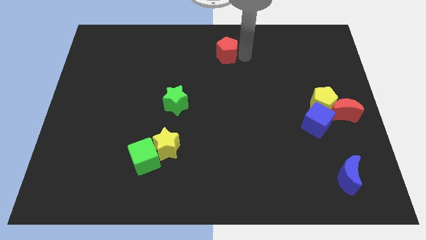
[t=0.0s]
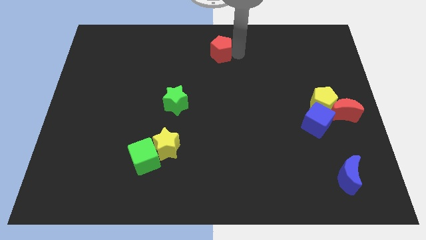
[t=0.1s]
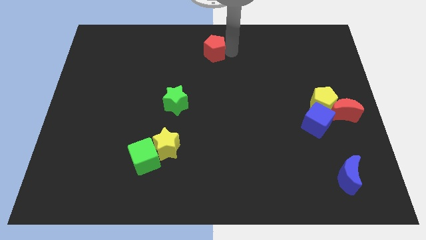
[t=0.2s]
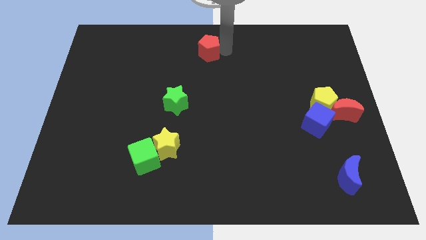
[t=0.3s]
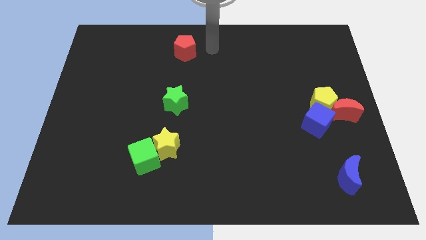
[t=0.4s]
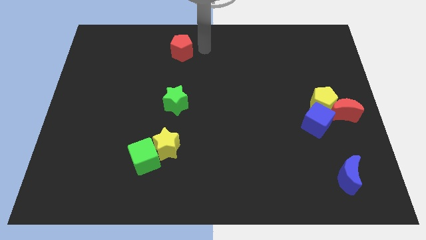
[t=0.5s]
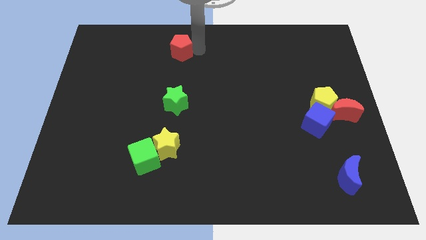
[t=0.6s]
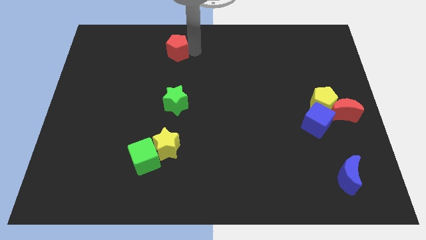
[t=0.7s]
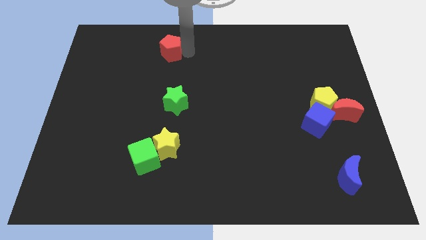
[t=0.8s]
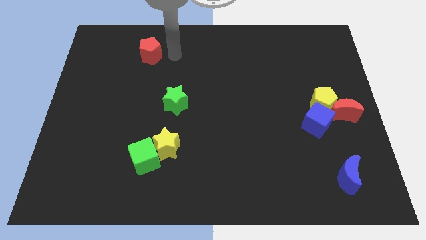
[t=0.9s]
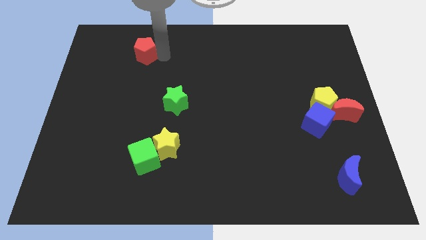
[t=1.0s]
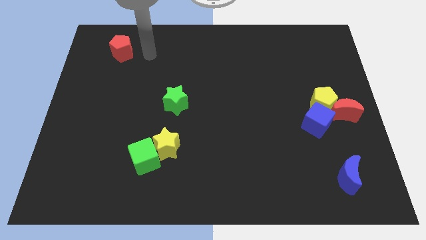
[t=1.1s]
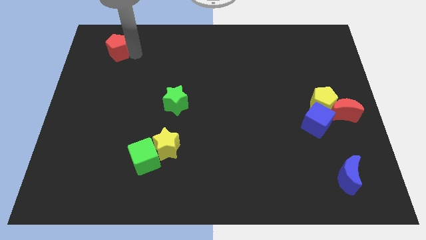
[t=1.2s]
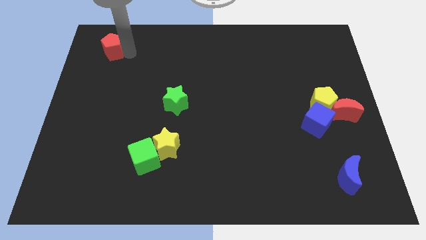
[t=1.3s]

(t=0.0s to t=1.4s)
place red pentagon to the top left corner of the board

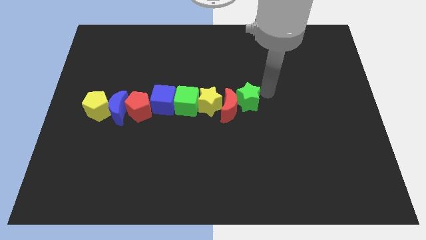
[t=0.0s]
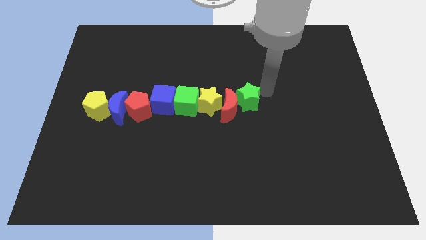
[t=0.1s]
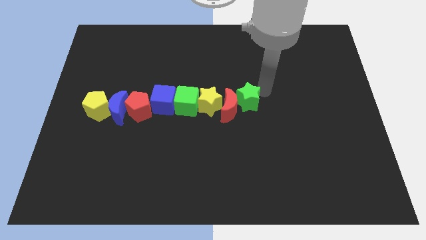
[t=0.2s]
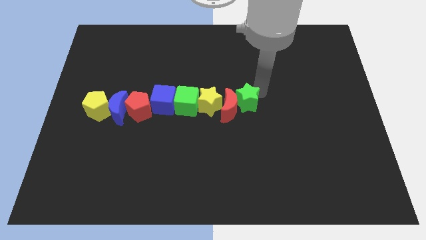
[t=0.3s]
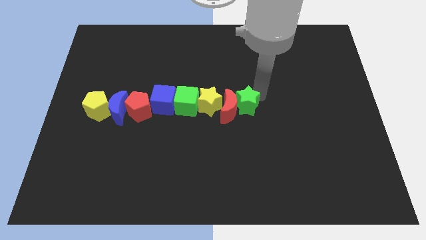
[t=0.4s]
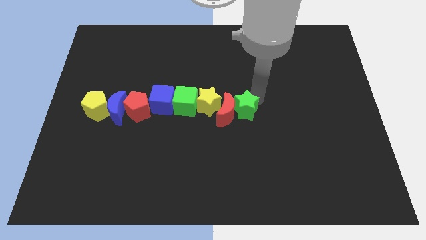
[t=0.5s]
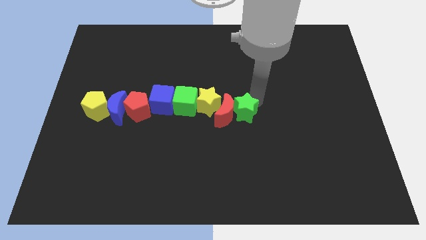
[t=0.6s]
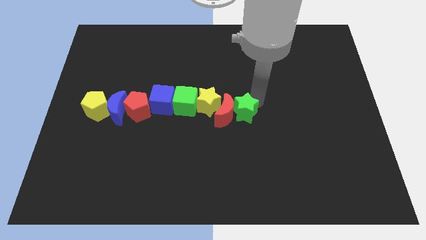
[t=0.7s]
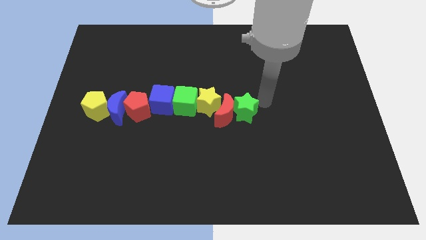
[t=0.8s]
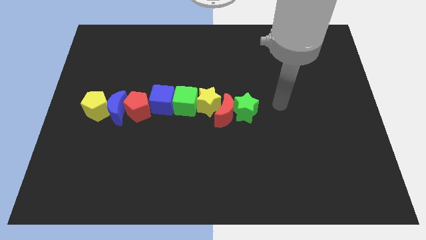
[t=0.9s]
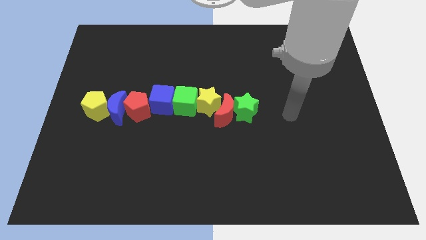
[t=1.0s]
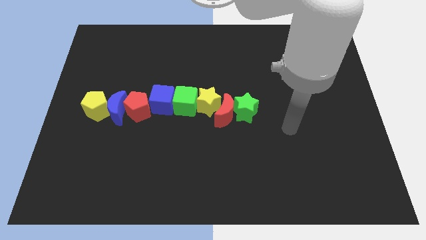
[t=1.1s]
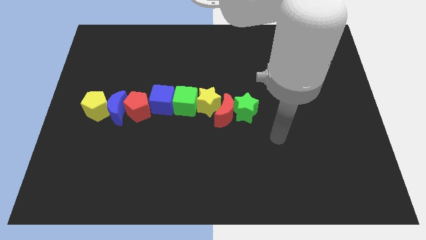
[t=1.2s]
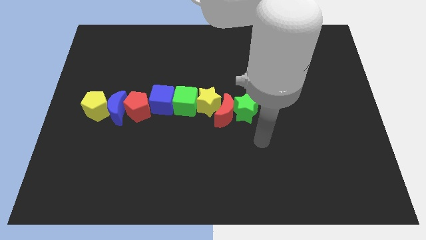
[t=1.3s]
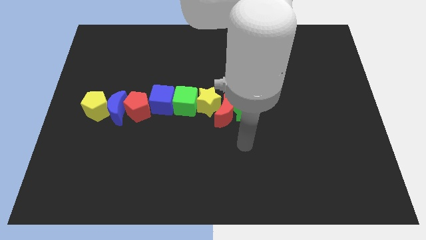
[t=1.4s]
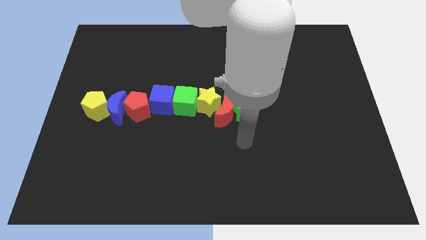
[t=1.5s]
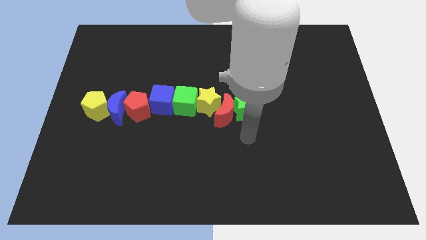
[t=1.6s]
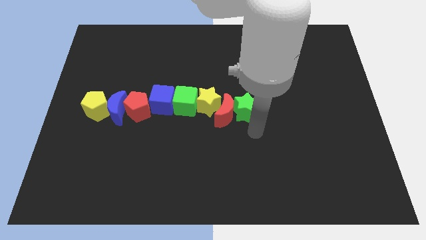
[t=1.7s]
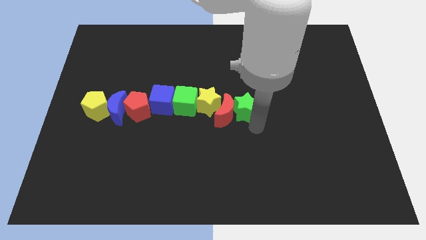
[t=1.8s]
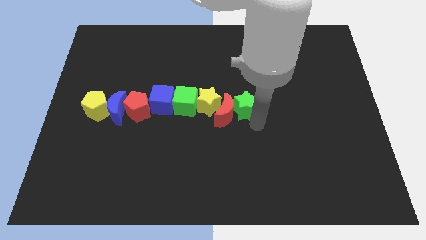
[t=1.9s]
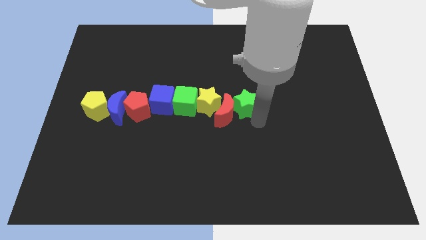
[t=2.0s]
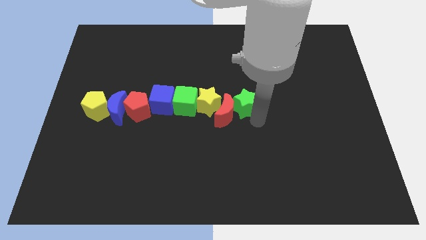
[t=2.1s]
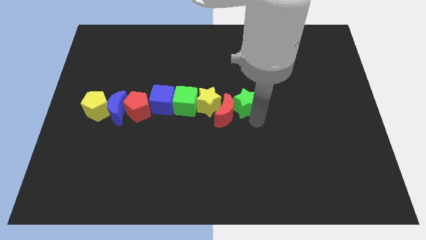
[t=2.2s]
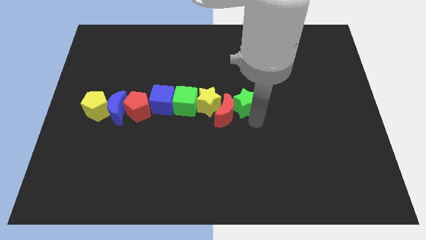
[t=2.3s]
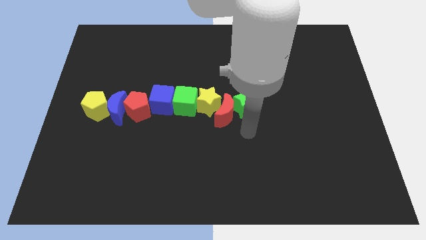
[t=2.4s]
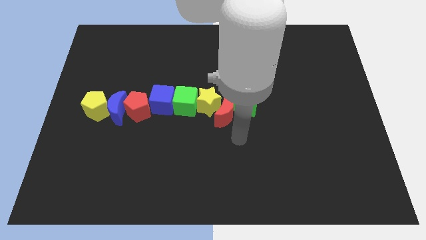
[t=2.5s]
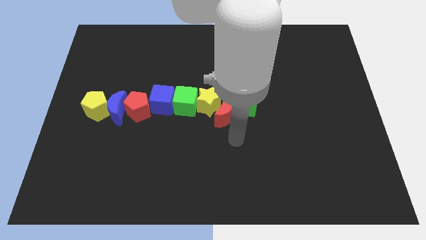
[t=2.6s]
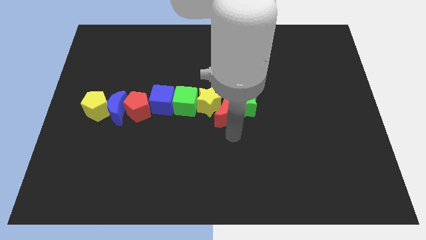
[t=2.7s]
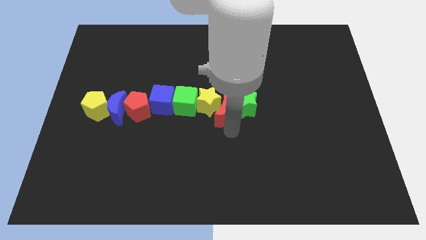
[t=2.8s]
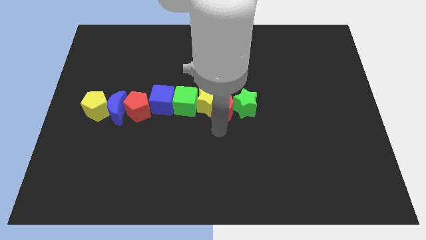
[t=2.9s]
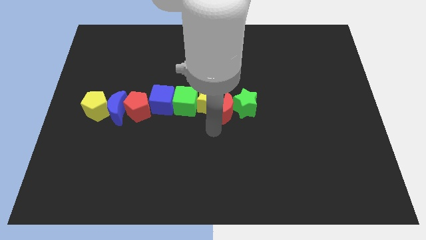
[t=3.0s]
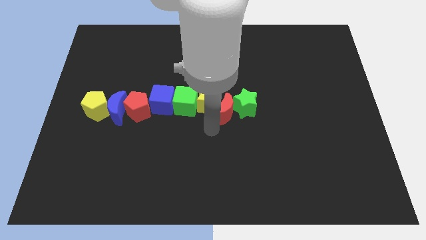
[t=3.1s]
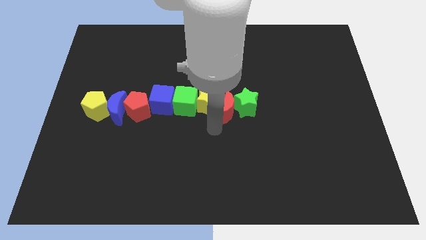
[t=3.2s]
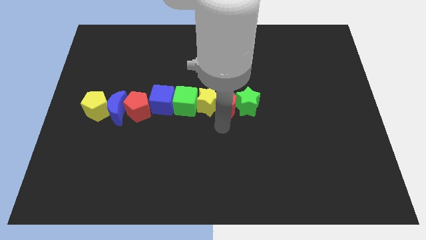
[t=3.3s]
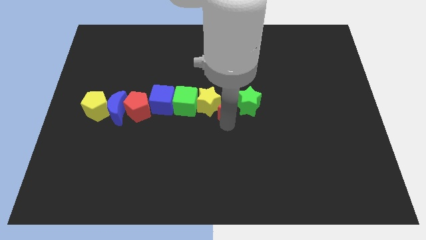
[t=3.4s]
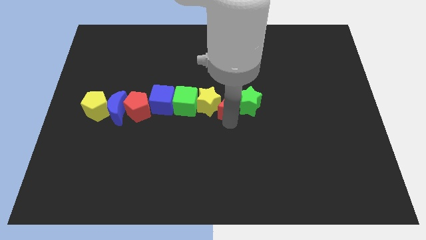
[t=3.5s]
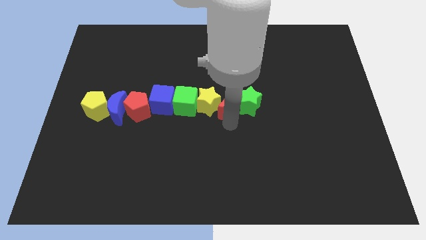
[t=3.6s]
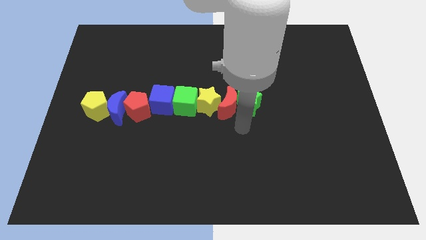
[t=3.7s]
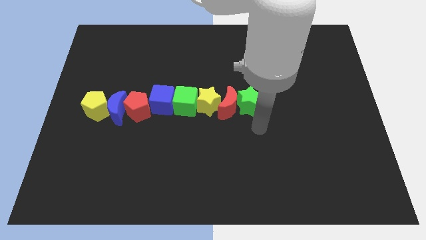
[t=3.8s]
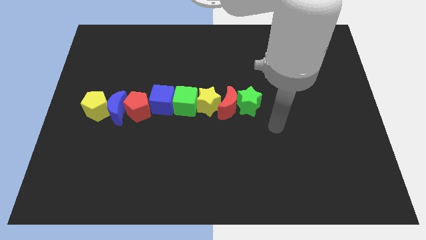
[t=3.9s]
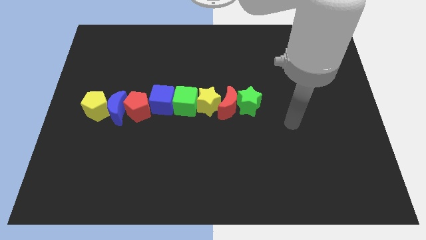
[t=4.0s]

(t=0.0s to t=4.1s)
tap the green star and red crescent

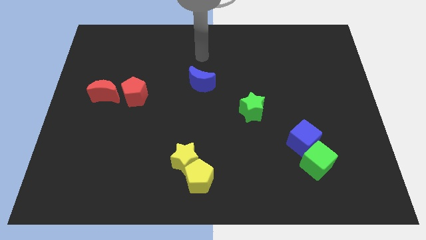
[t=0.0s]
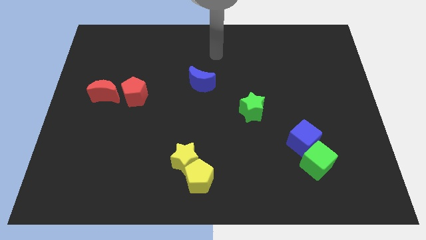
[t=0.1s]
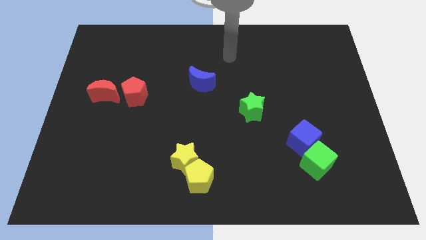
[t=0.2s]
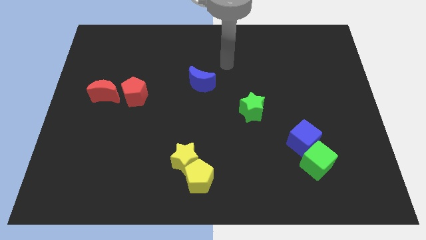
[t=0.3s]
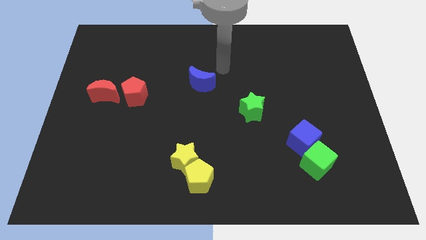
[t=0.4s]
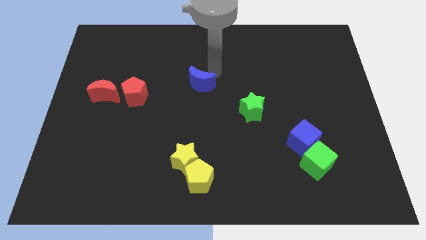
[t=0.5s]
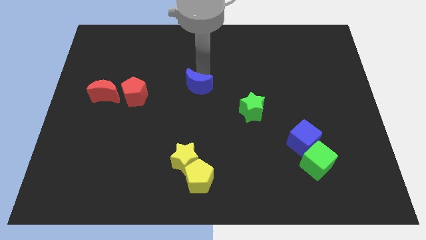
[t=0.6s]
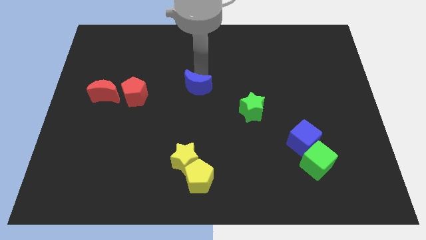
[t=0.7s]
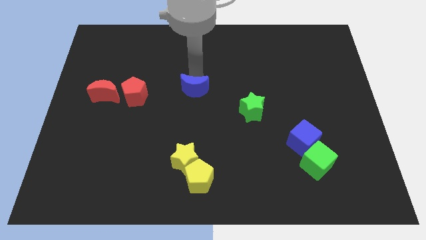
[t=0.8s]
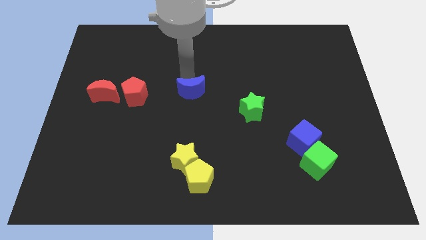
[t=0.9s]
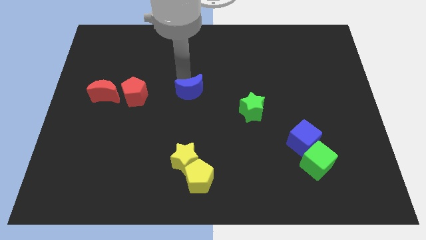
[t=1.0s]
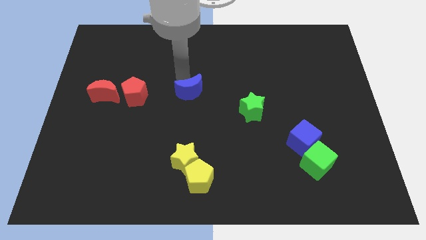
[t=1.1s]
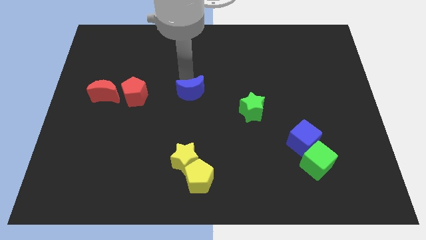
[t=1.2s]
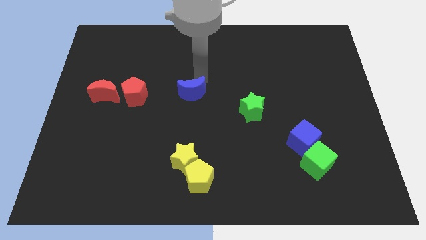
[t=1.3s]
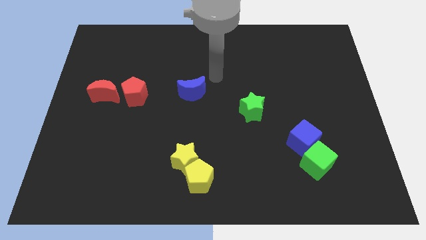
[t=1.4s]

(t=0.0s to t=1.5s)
place blue moon diagonally top left to the green star

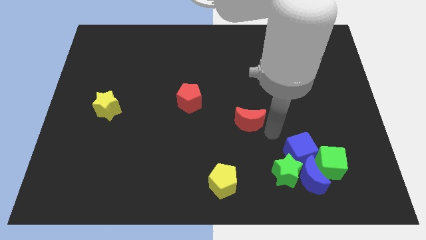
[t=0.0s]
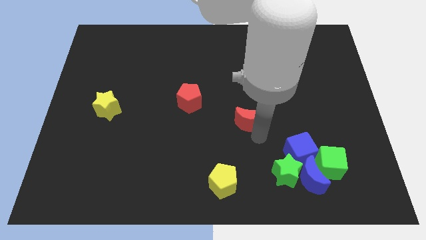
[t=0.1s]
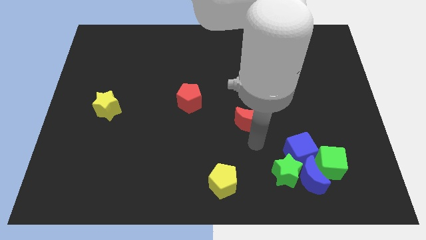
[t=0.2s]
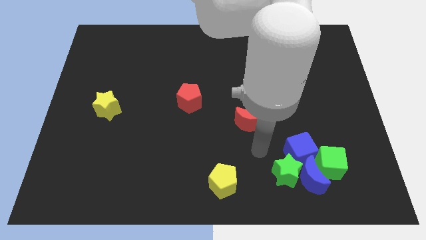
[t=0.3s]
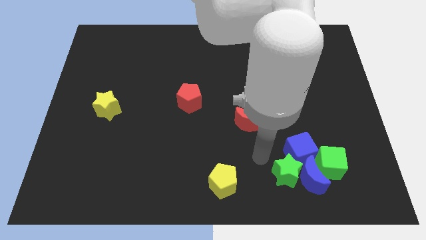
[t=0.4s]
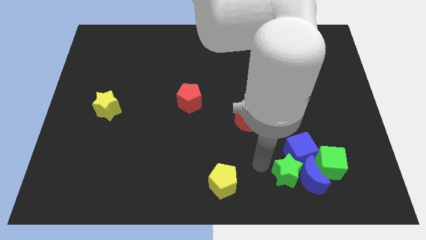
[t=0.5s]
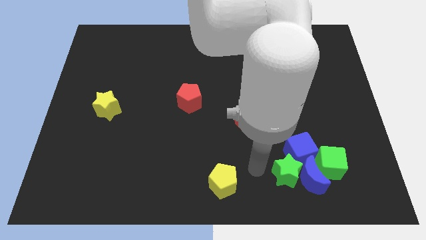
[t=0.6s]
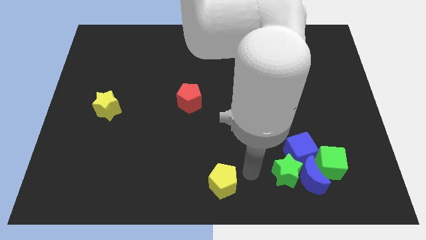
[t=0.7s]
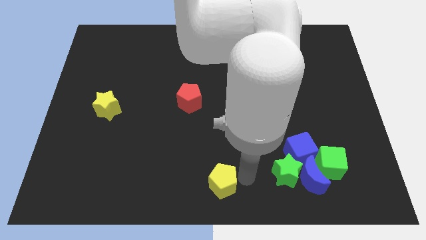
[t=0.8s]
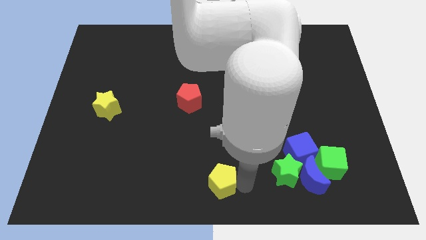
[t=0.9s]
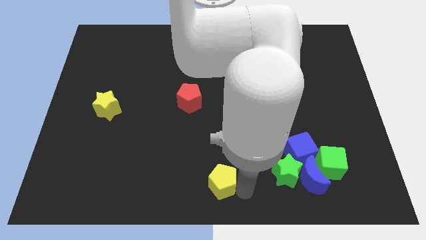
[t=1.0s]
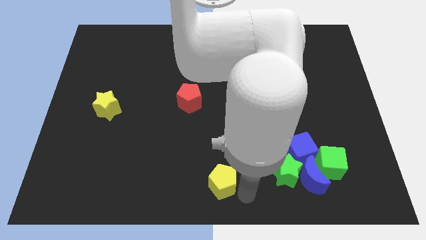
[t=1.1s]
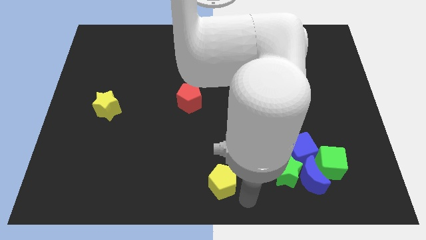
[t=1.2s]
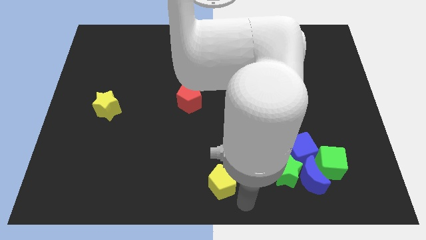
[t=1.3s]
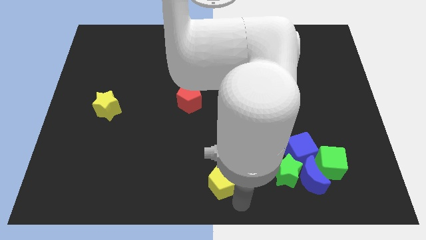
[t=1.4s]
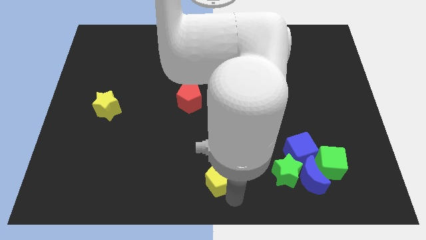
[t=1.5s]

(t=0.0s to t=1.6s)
move your arm to the mottom of yellow pentagon

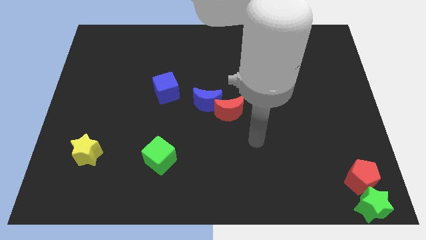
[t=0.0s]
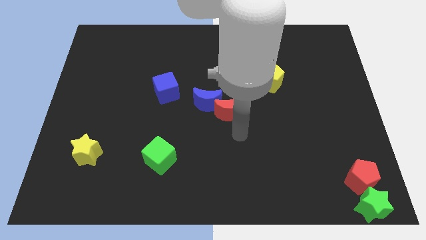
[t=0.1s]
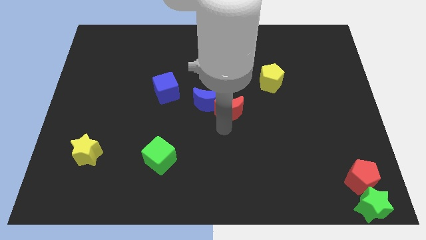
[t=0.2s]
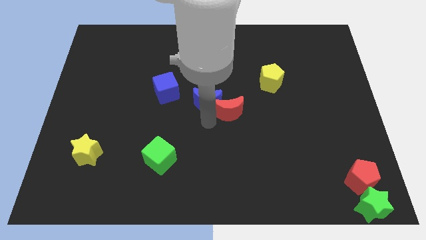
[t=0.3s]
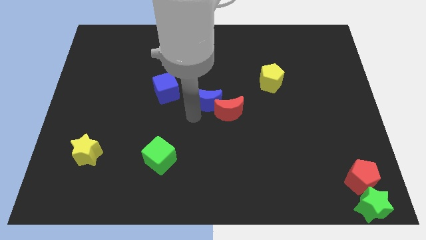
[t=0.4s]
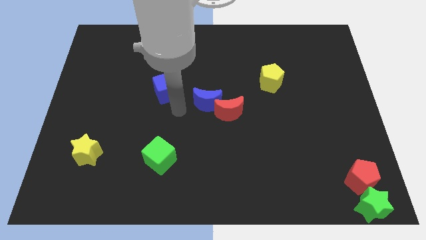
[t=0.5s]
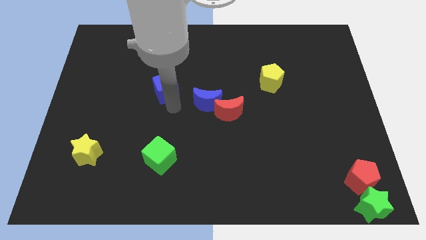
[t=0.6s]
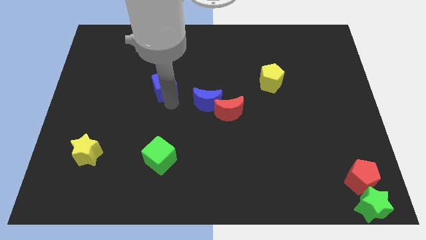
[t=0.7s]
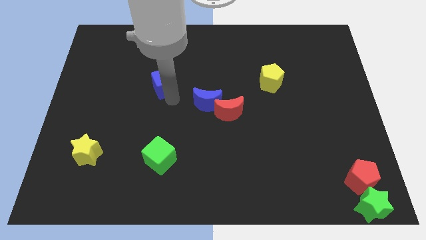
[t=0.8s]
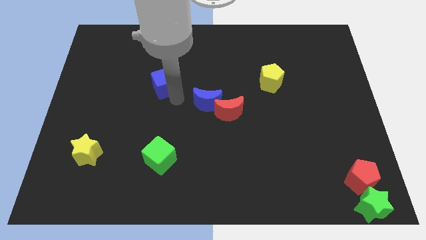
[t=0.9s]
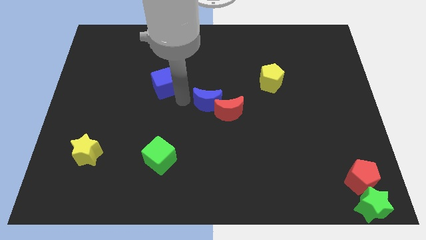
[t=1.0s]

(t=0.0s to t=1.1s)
push the blue cube slightly to the top side of the board
